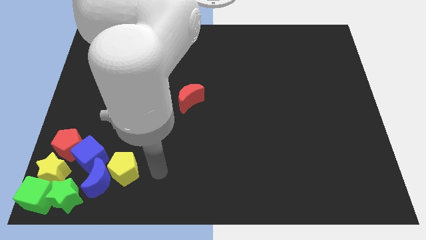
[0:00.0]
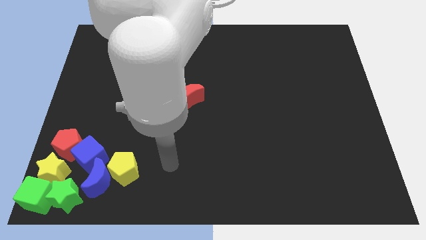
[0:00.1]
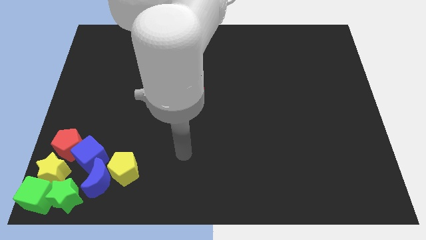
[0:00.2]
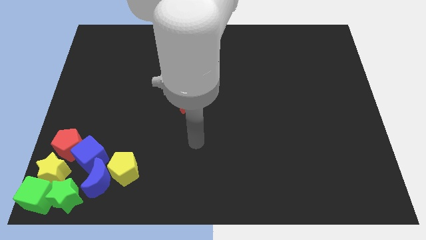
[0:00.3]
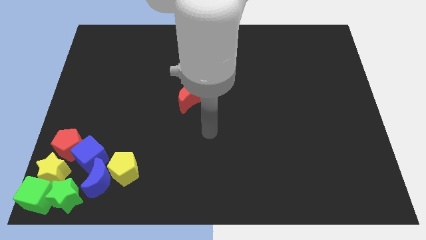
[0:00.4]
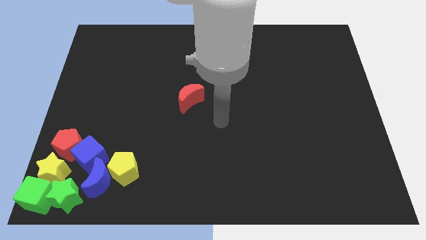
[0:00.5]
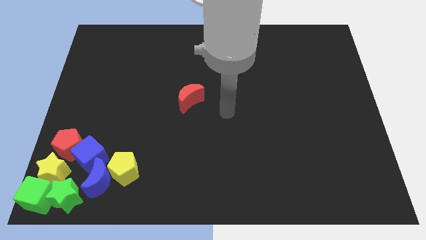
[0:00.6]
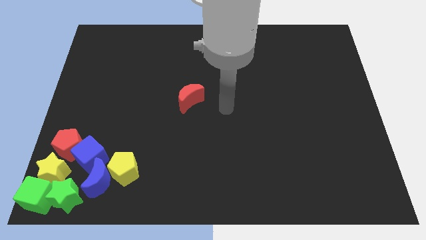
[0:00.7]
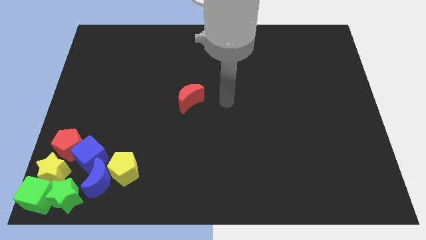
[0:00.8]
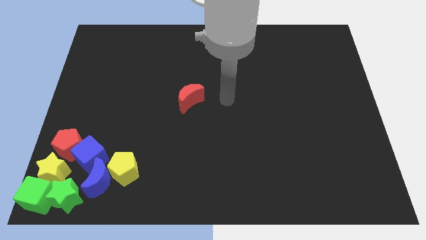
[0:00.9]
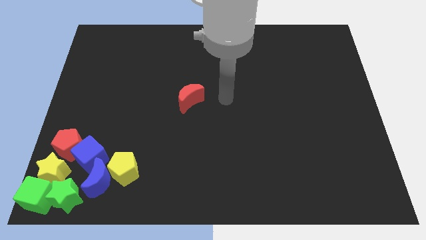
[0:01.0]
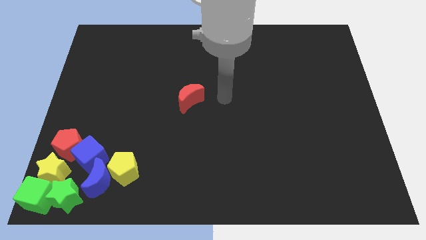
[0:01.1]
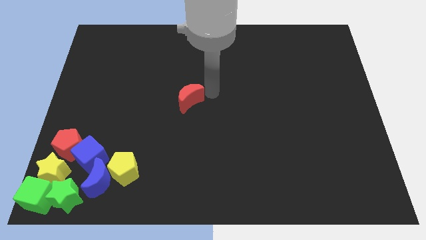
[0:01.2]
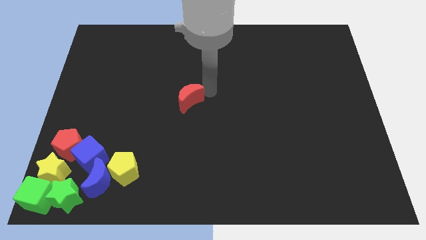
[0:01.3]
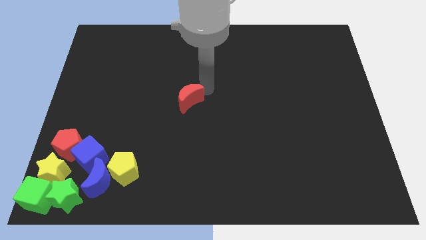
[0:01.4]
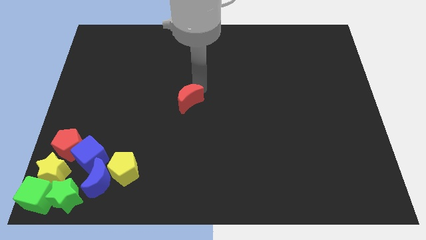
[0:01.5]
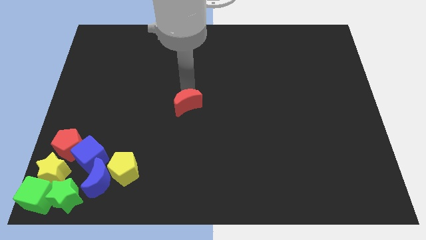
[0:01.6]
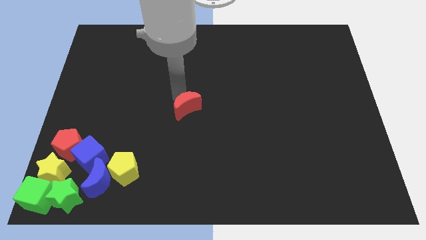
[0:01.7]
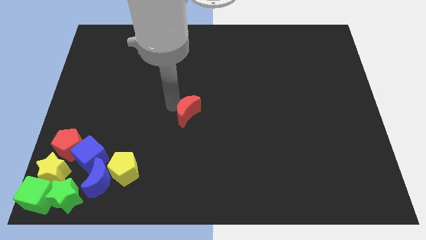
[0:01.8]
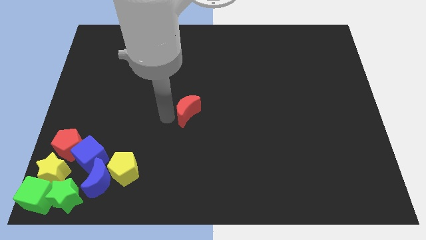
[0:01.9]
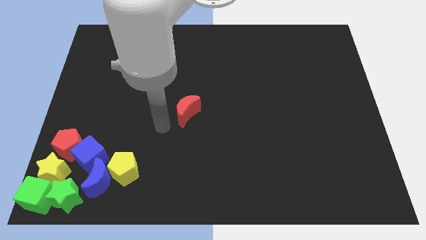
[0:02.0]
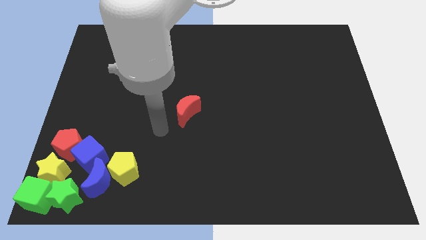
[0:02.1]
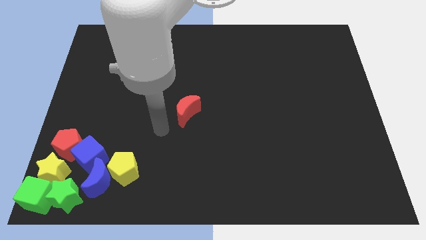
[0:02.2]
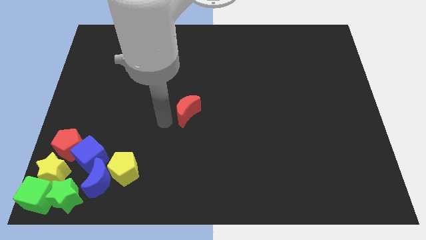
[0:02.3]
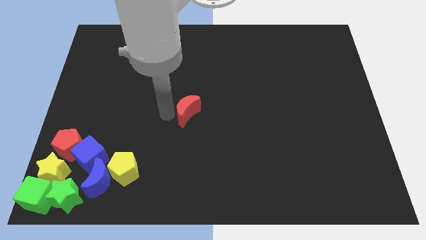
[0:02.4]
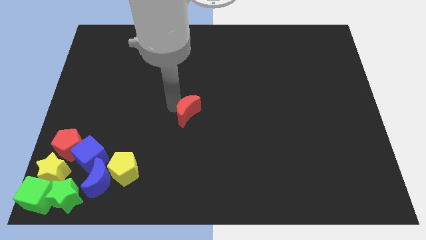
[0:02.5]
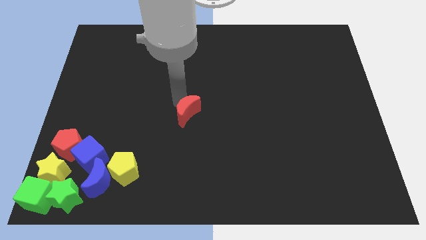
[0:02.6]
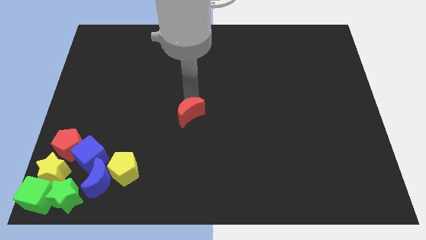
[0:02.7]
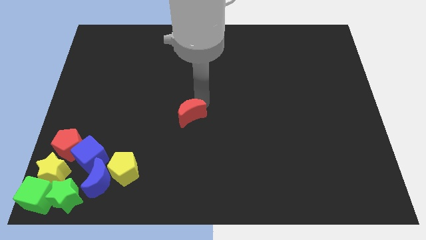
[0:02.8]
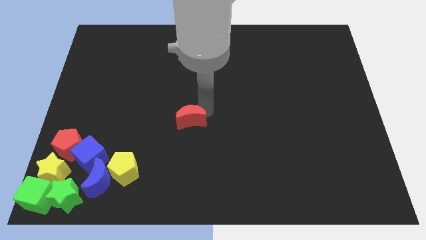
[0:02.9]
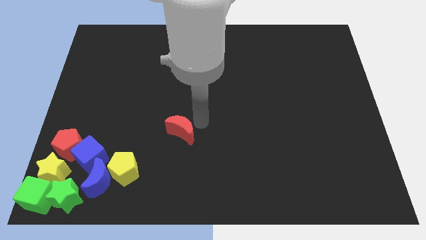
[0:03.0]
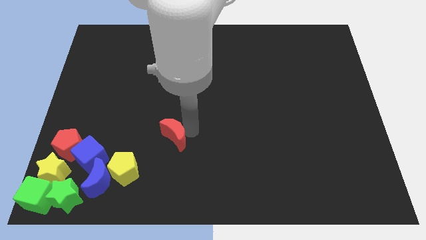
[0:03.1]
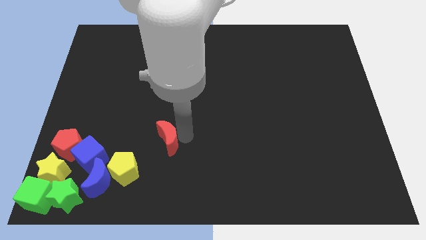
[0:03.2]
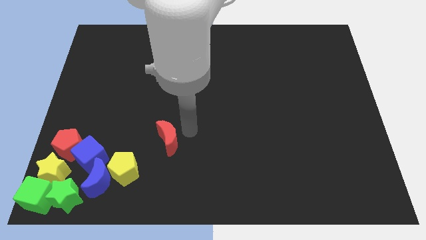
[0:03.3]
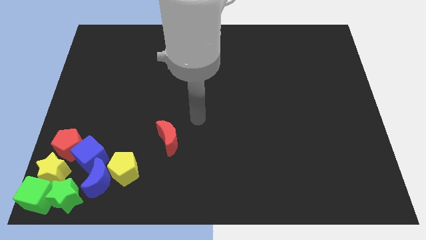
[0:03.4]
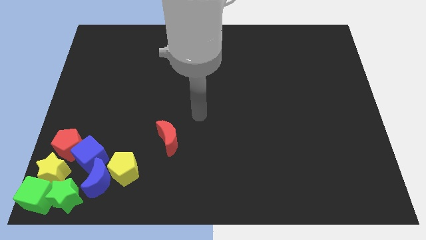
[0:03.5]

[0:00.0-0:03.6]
place the red moon at the top of the yellow pentagon

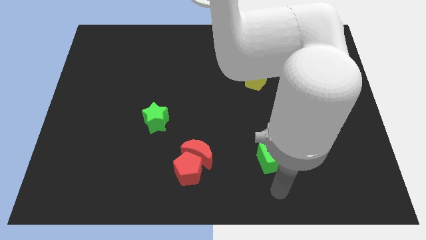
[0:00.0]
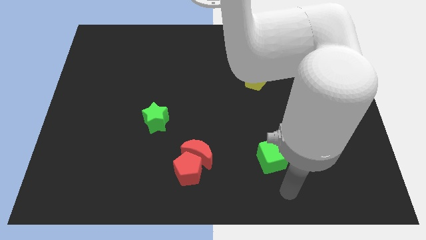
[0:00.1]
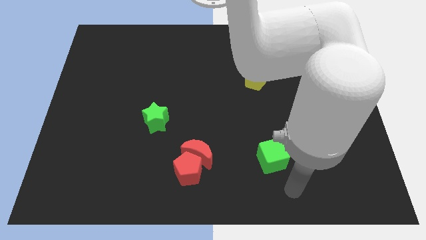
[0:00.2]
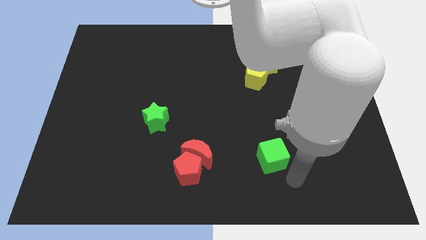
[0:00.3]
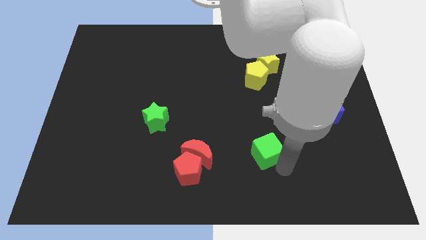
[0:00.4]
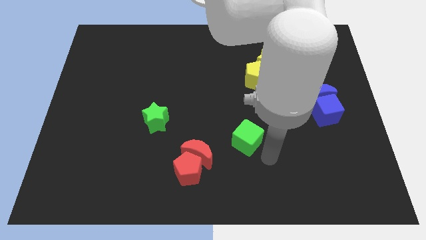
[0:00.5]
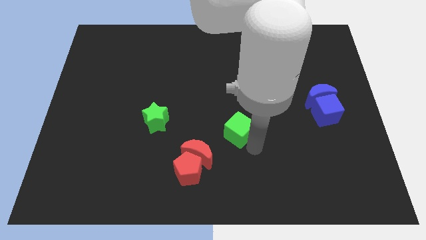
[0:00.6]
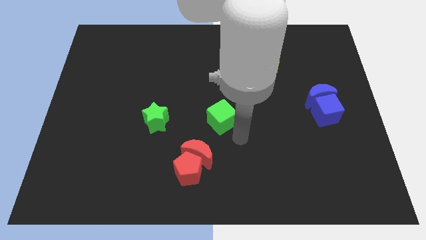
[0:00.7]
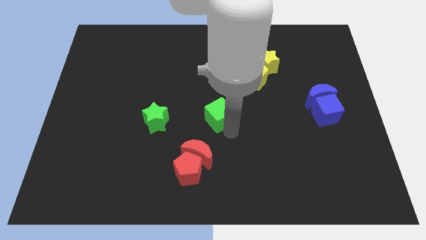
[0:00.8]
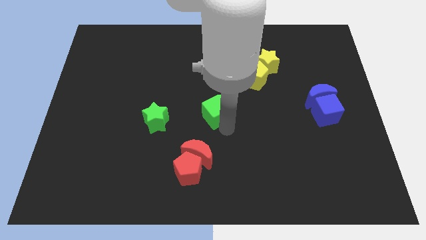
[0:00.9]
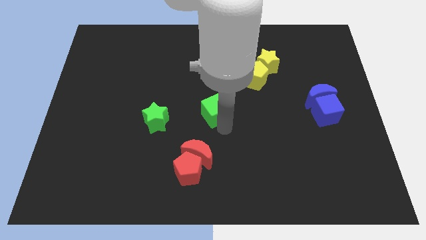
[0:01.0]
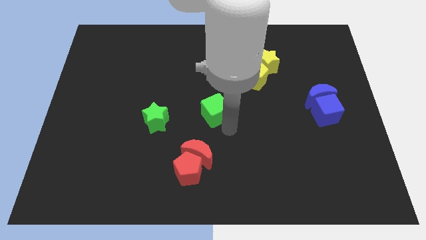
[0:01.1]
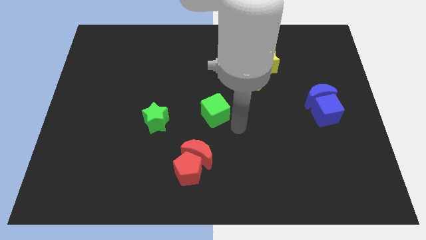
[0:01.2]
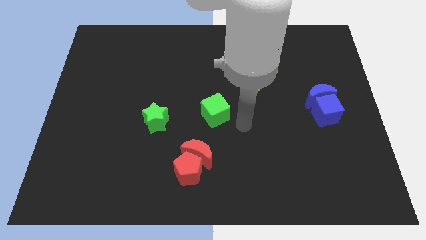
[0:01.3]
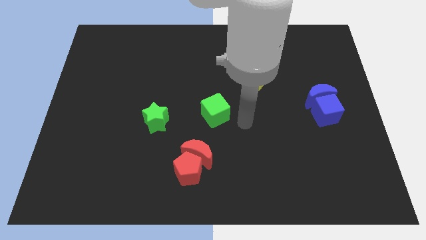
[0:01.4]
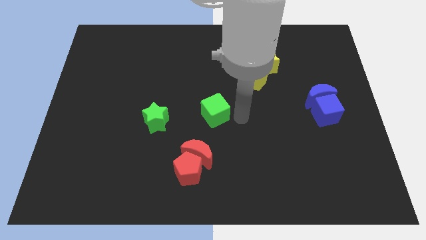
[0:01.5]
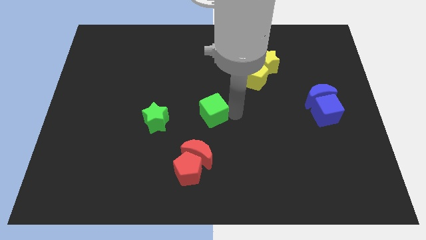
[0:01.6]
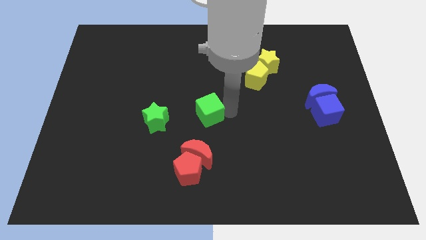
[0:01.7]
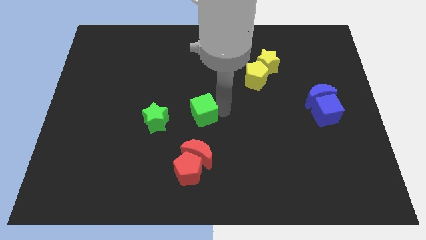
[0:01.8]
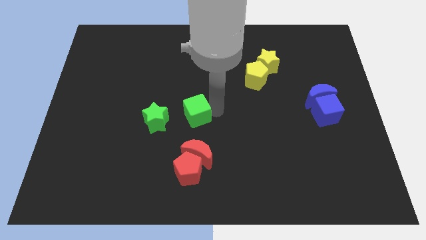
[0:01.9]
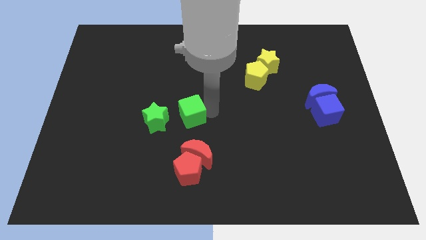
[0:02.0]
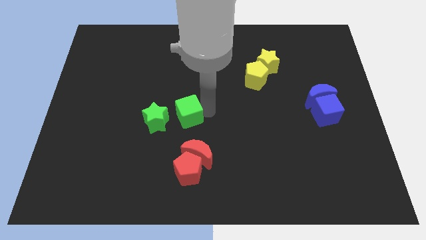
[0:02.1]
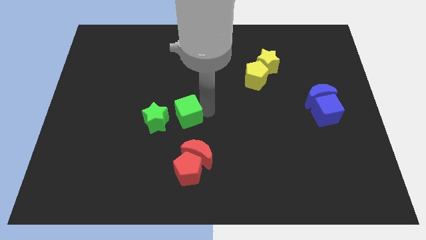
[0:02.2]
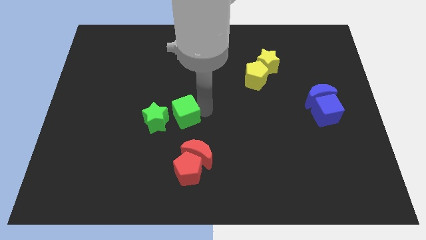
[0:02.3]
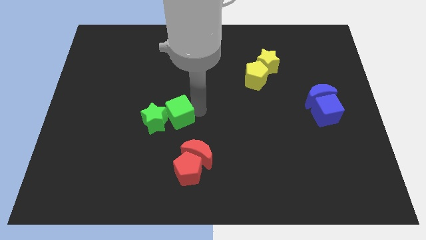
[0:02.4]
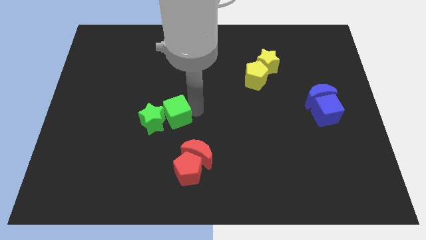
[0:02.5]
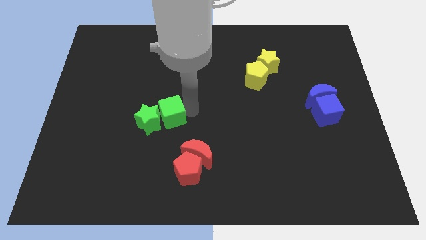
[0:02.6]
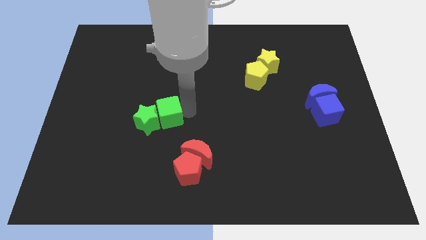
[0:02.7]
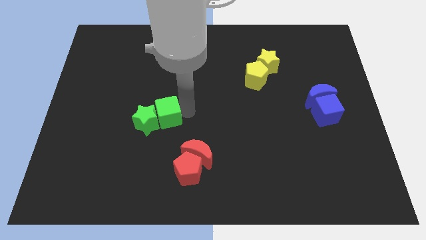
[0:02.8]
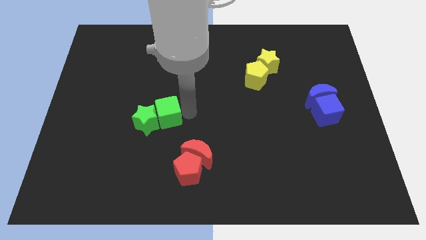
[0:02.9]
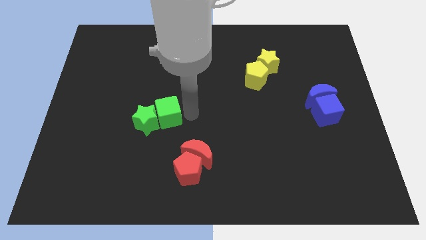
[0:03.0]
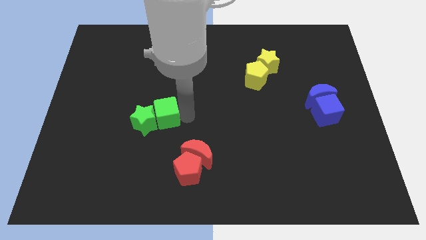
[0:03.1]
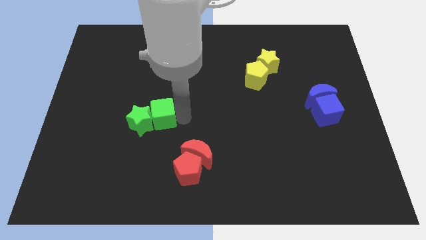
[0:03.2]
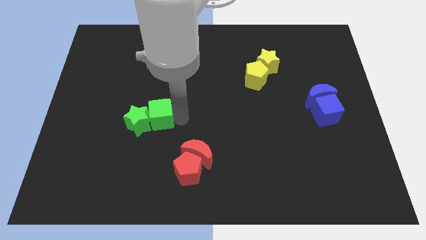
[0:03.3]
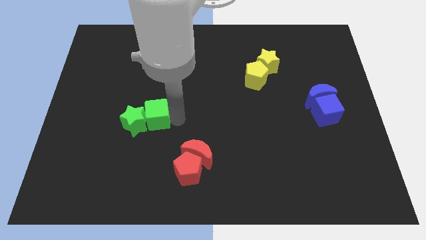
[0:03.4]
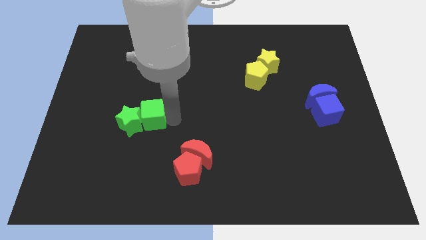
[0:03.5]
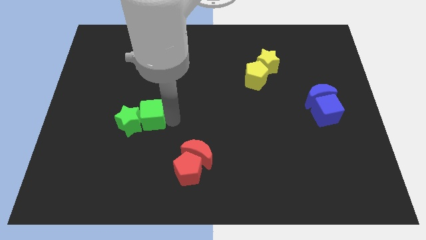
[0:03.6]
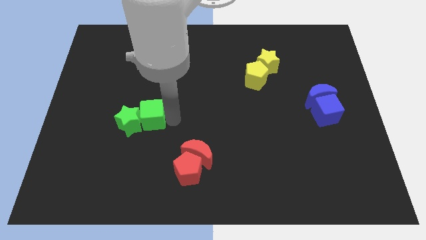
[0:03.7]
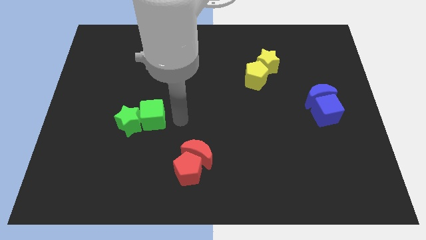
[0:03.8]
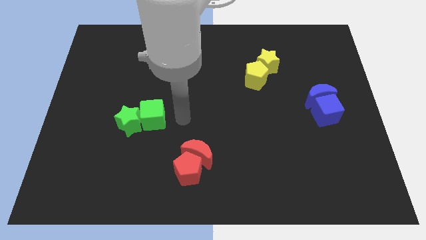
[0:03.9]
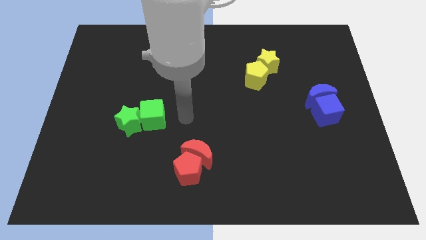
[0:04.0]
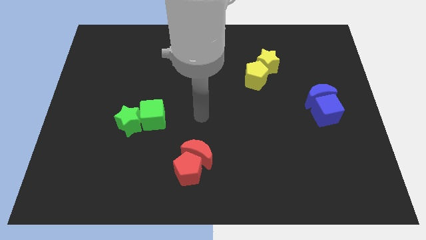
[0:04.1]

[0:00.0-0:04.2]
move the green cube into the green star

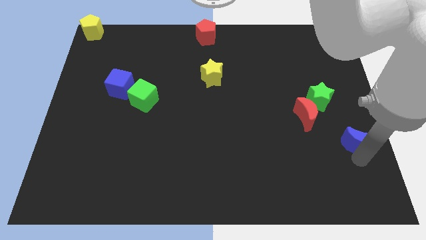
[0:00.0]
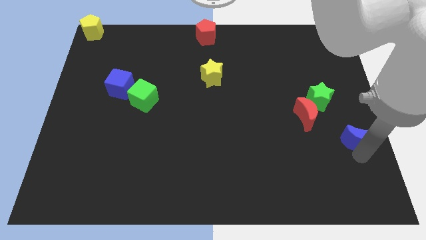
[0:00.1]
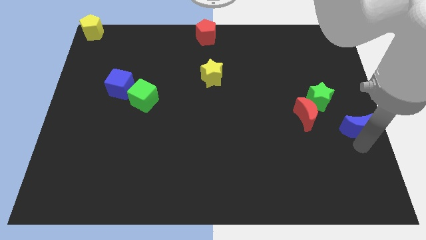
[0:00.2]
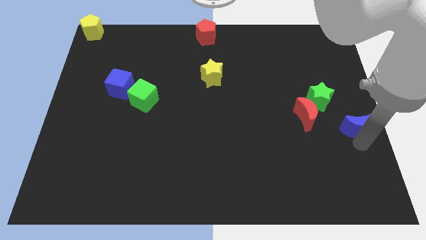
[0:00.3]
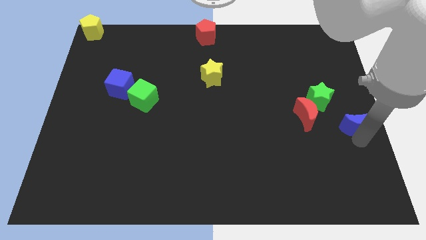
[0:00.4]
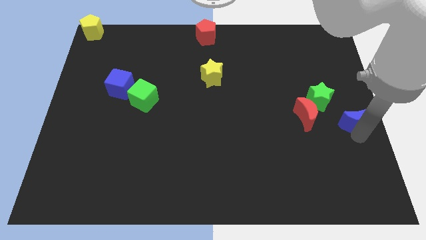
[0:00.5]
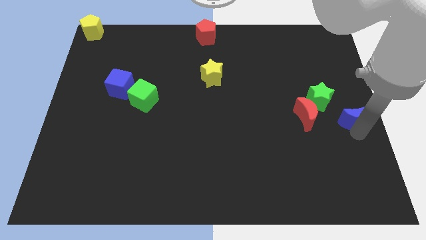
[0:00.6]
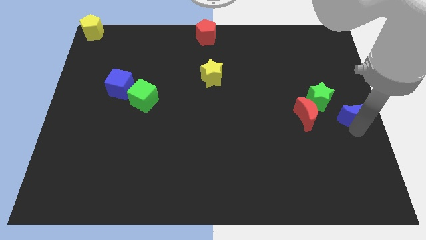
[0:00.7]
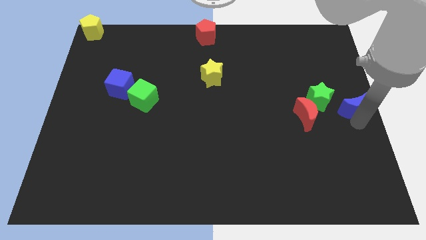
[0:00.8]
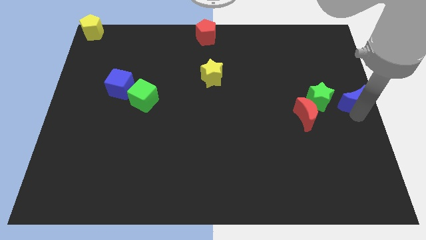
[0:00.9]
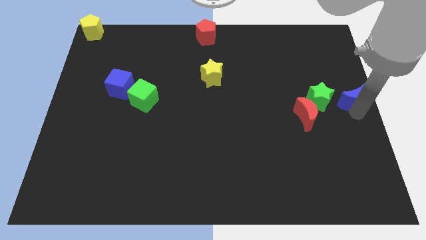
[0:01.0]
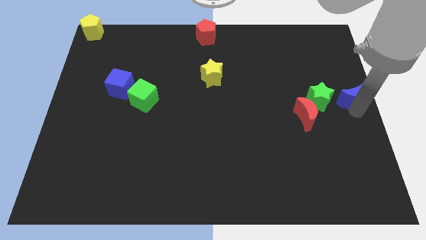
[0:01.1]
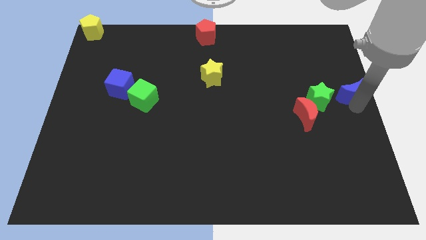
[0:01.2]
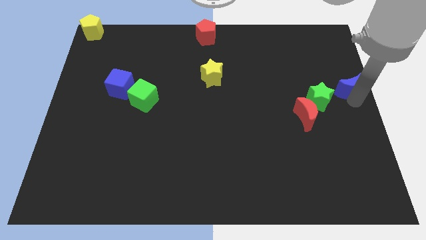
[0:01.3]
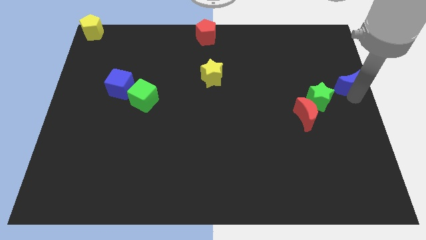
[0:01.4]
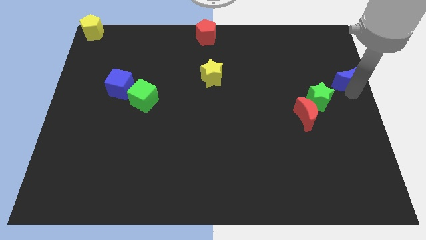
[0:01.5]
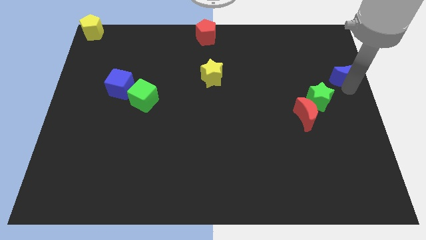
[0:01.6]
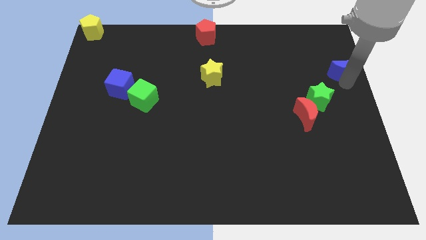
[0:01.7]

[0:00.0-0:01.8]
push the blue moon towards the top right side of the board
